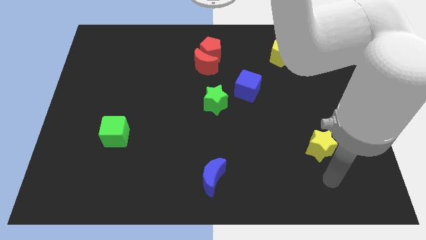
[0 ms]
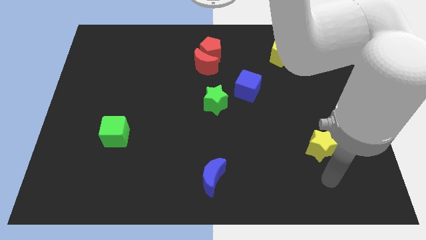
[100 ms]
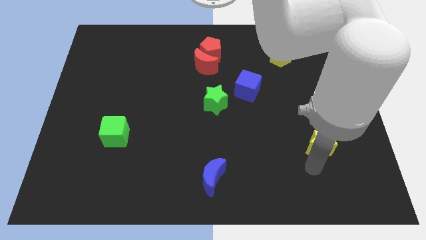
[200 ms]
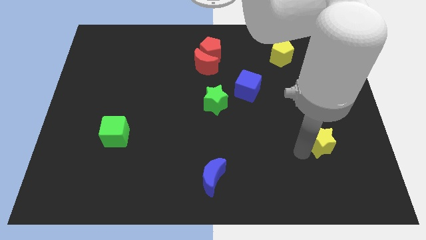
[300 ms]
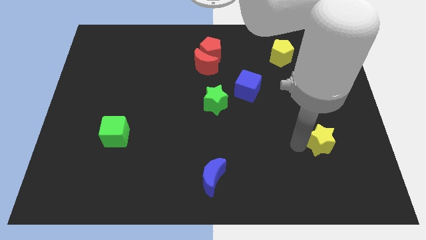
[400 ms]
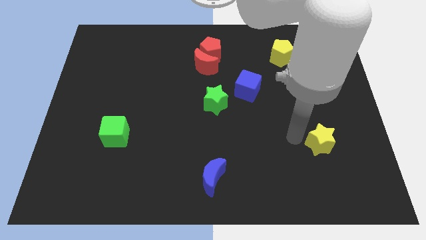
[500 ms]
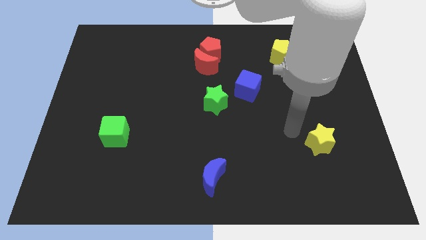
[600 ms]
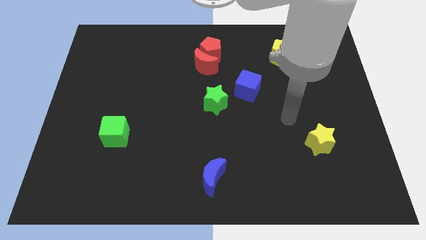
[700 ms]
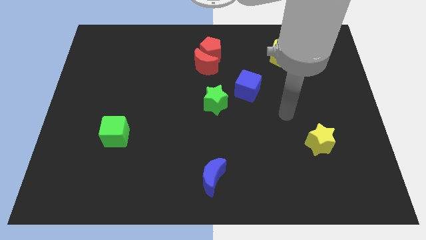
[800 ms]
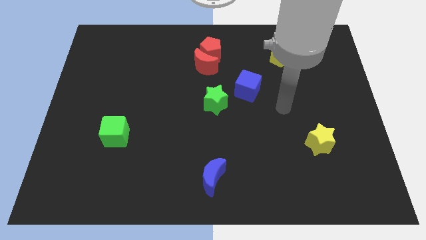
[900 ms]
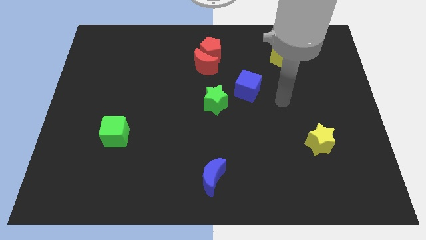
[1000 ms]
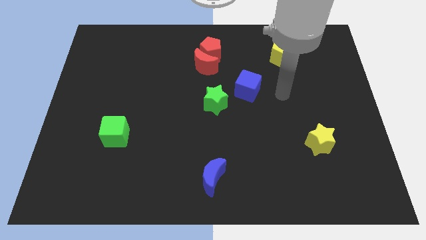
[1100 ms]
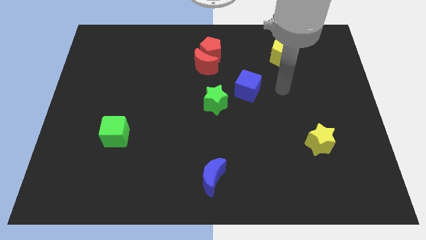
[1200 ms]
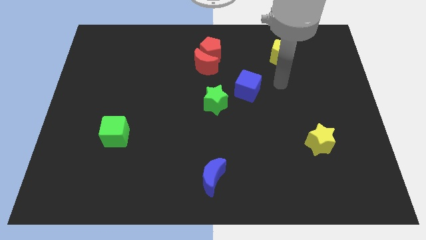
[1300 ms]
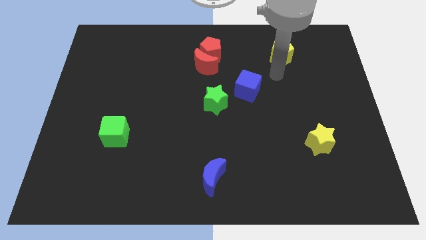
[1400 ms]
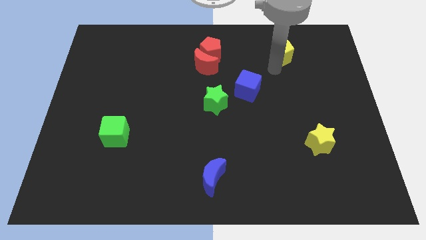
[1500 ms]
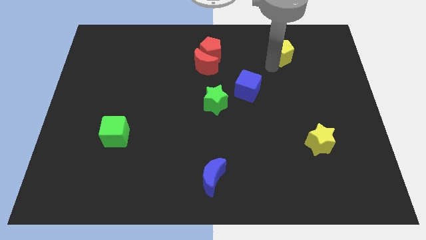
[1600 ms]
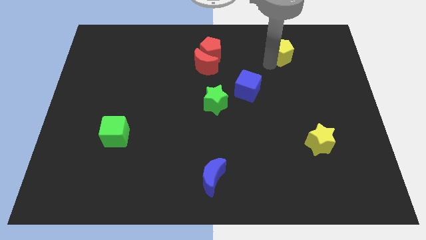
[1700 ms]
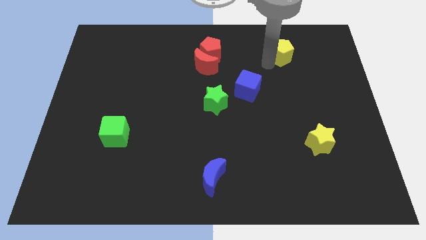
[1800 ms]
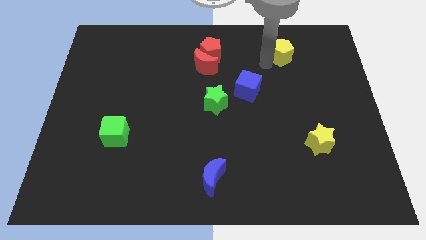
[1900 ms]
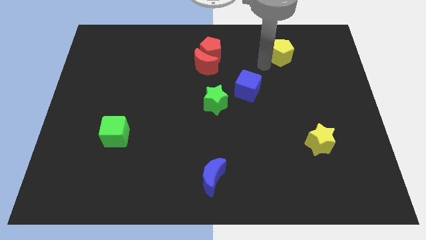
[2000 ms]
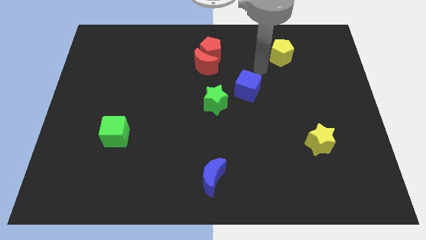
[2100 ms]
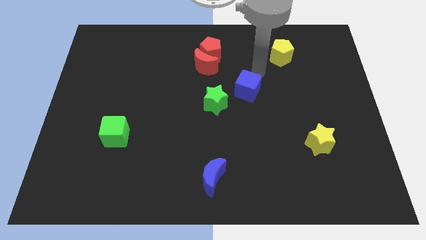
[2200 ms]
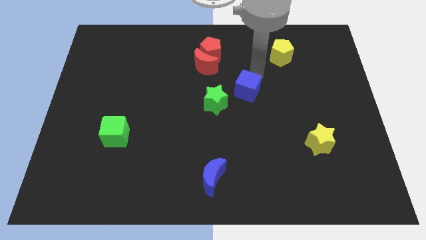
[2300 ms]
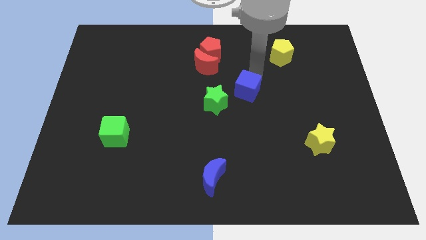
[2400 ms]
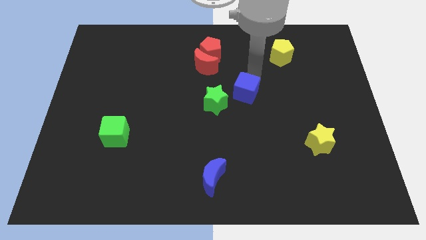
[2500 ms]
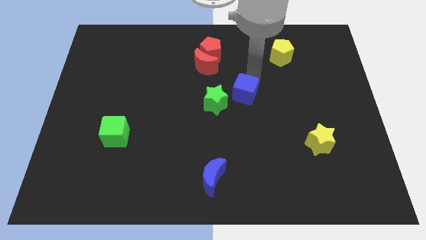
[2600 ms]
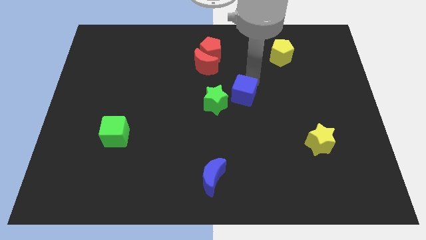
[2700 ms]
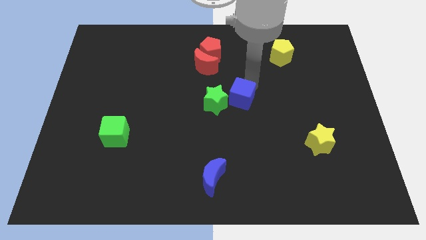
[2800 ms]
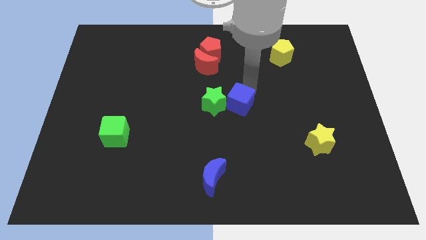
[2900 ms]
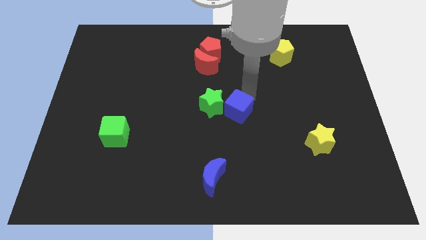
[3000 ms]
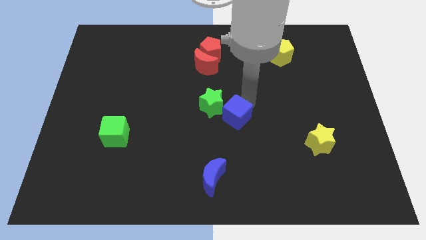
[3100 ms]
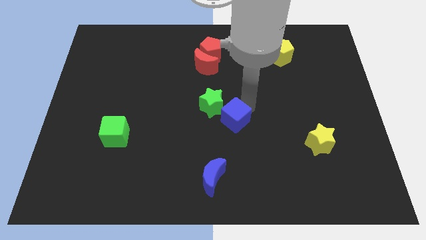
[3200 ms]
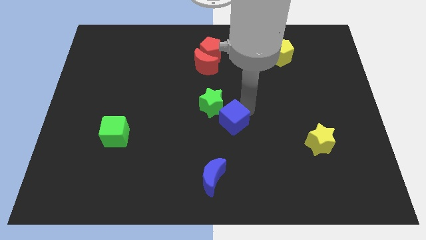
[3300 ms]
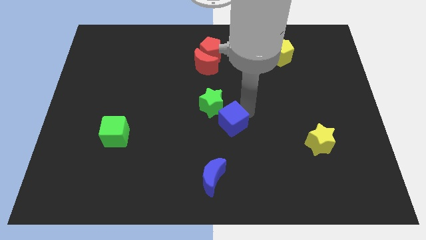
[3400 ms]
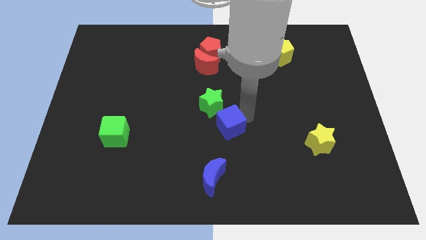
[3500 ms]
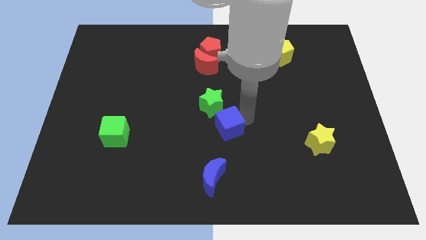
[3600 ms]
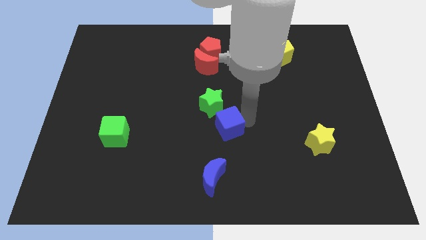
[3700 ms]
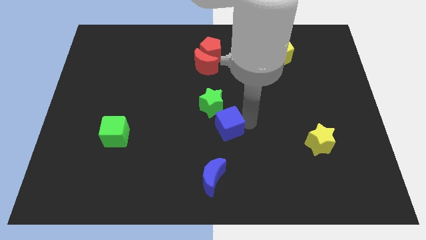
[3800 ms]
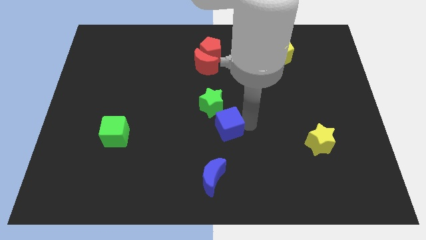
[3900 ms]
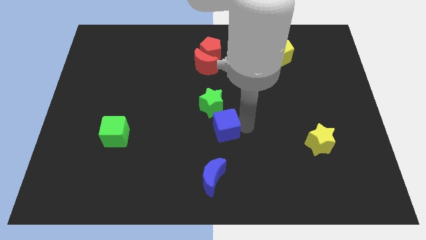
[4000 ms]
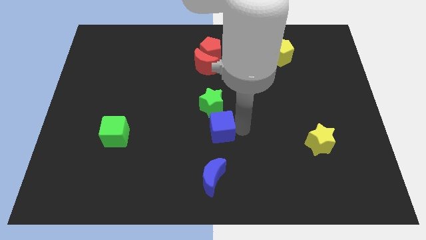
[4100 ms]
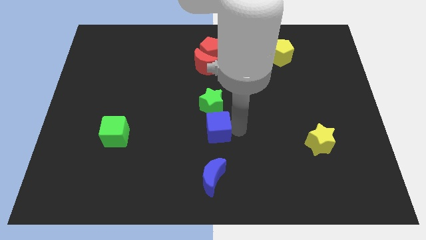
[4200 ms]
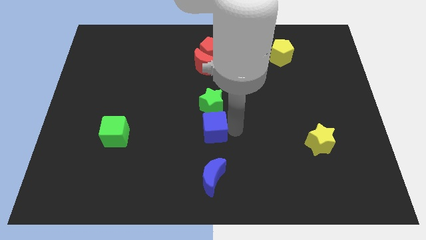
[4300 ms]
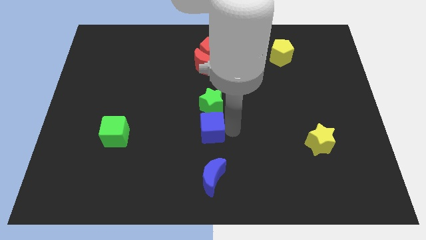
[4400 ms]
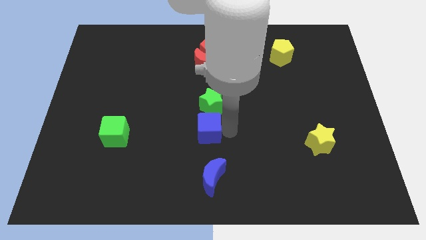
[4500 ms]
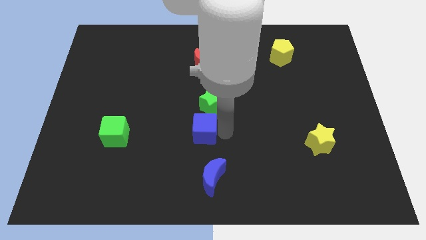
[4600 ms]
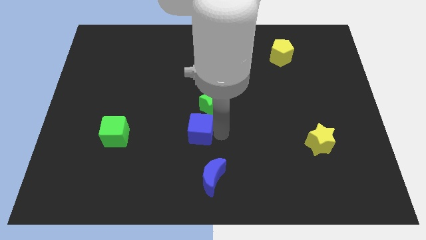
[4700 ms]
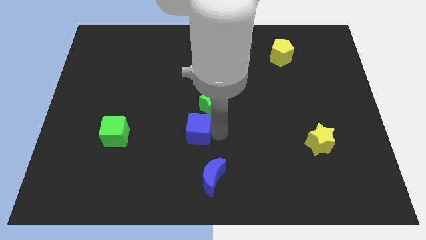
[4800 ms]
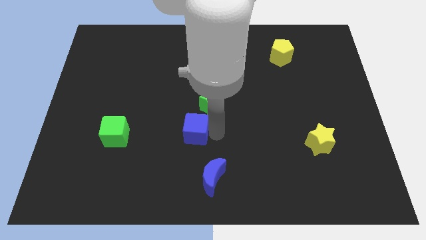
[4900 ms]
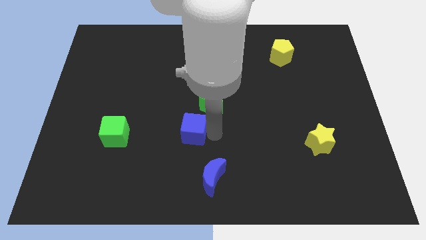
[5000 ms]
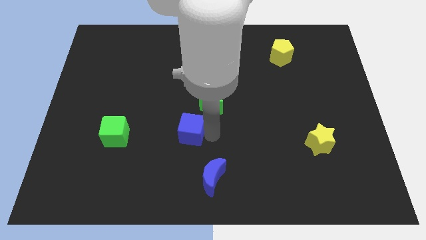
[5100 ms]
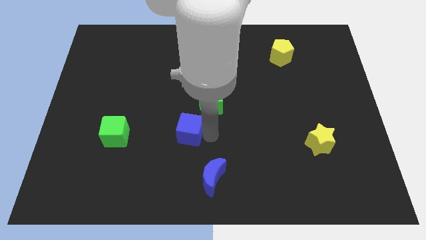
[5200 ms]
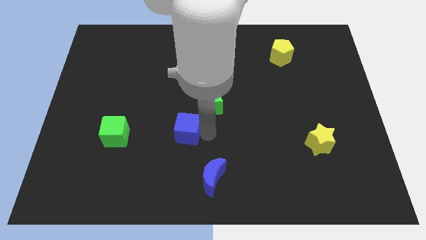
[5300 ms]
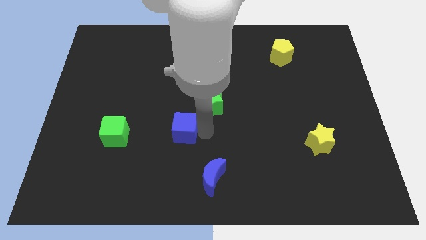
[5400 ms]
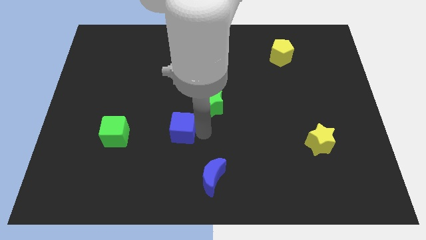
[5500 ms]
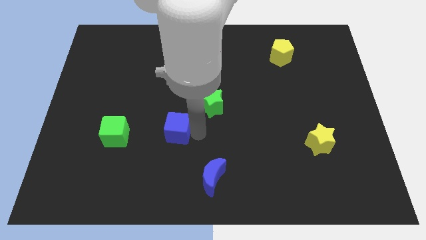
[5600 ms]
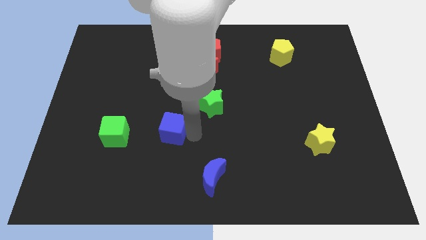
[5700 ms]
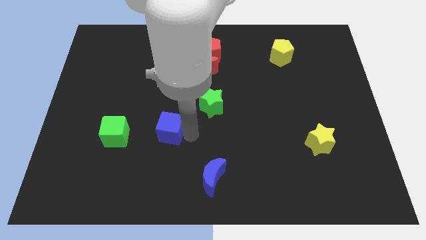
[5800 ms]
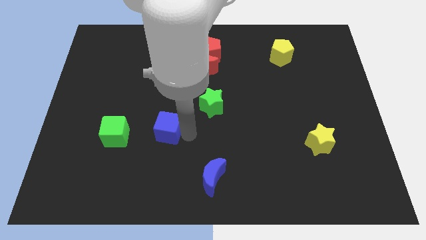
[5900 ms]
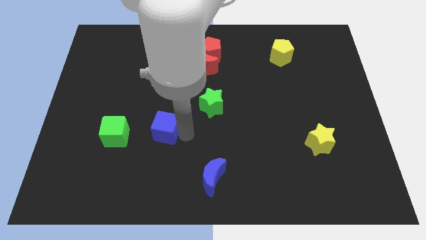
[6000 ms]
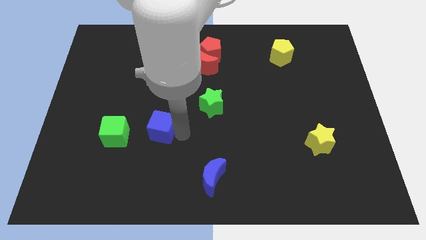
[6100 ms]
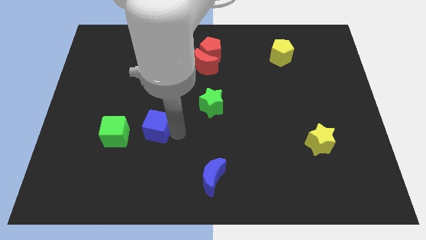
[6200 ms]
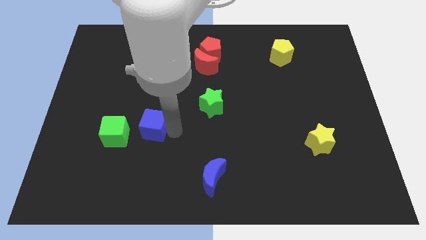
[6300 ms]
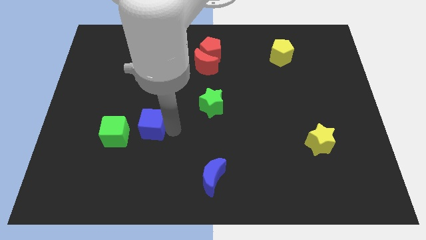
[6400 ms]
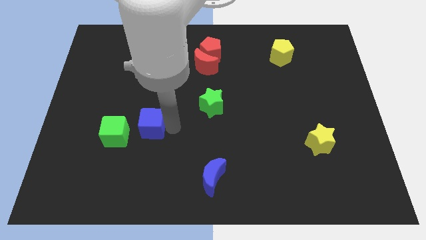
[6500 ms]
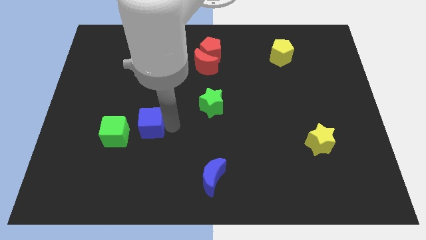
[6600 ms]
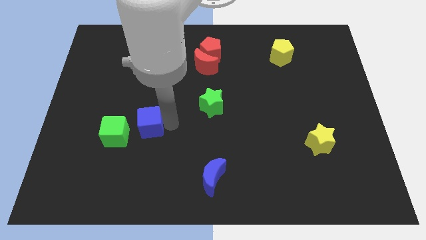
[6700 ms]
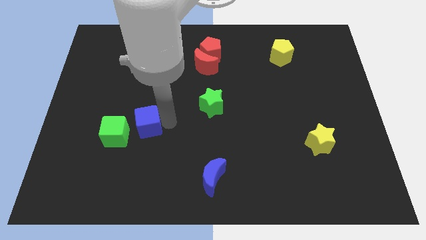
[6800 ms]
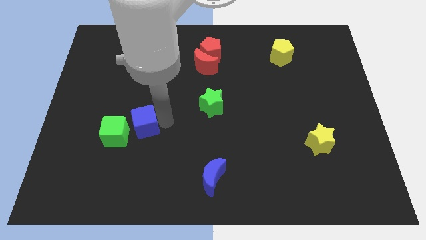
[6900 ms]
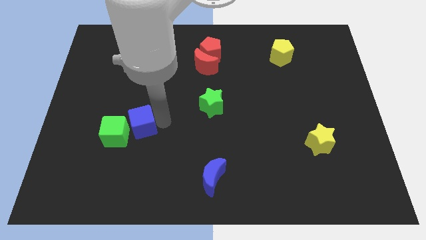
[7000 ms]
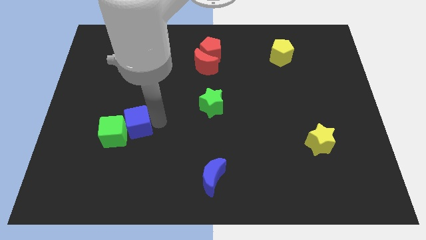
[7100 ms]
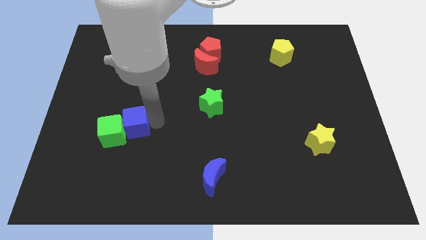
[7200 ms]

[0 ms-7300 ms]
move the blue cube to the green cube

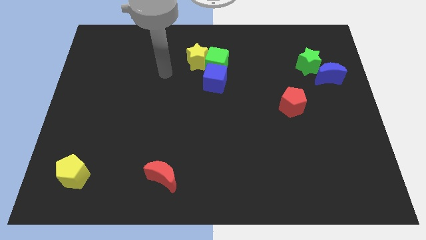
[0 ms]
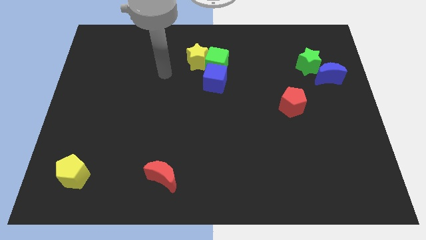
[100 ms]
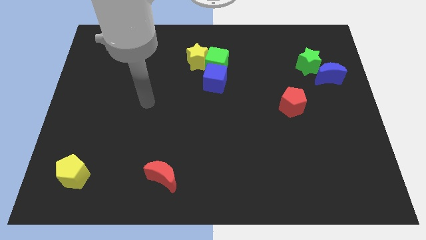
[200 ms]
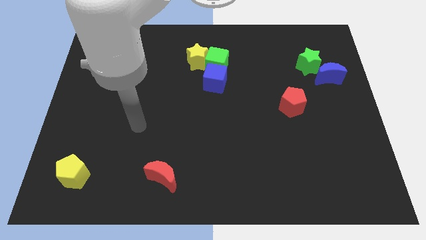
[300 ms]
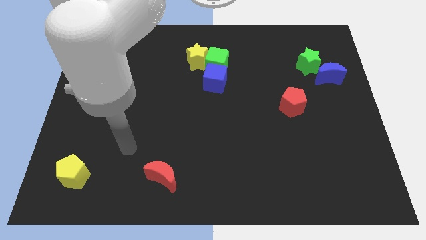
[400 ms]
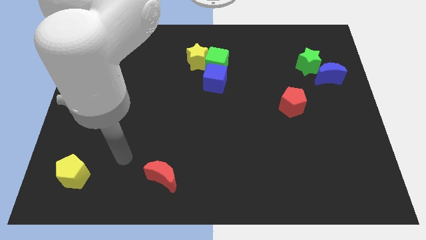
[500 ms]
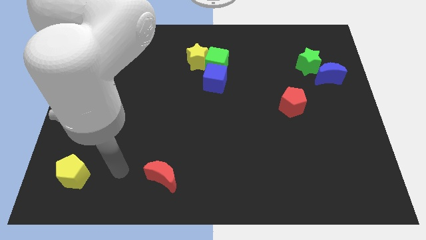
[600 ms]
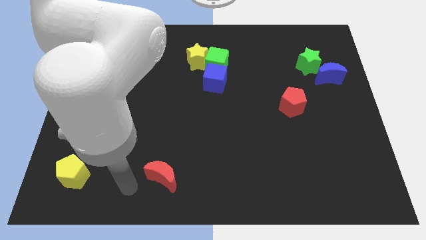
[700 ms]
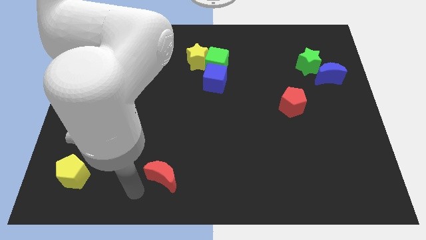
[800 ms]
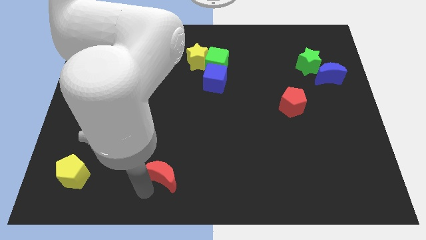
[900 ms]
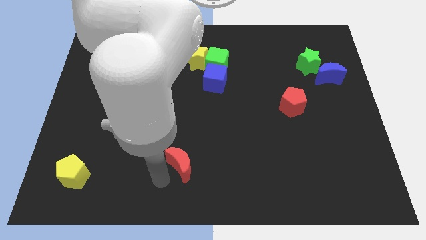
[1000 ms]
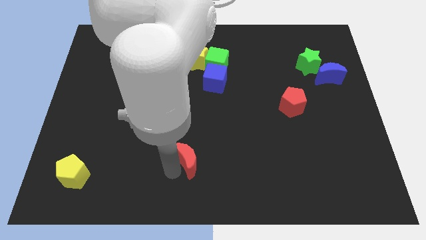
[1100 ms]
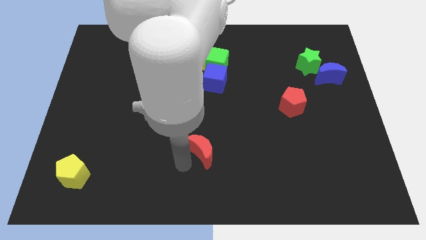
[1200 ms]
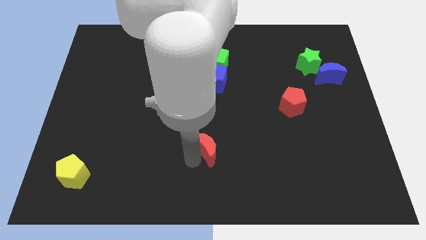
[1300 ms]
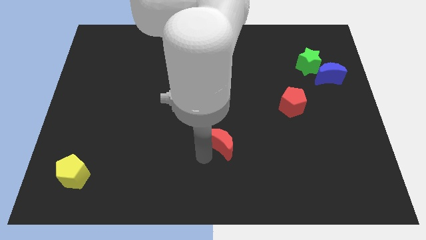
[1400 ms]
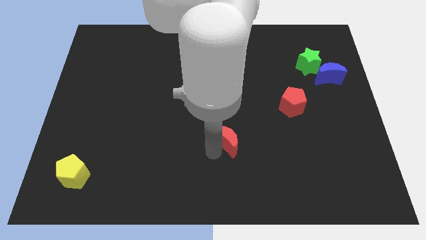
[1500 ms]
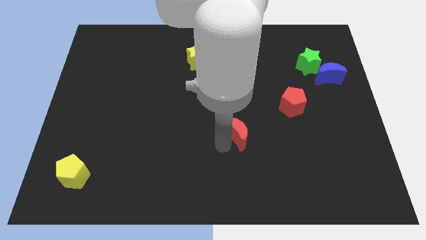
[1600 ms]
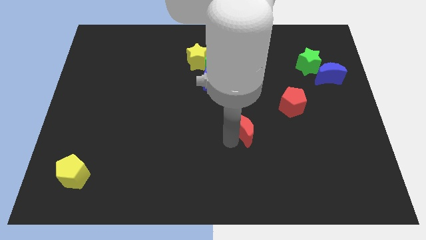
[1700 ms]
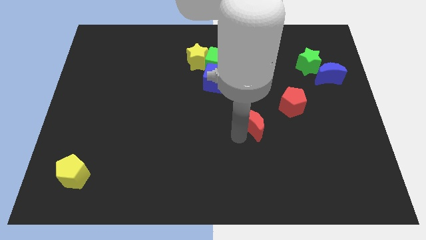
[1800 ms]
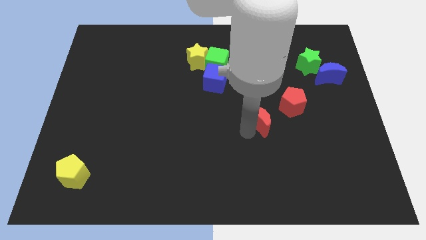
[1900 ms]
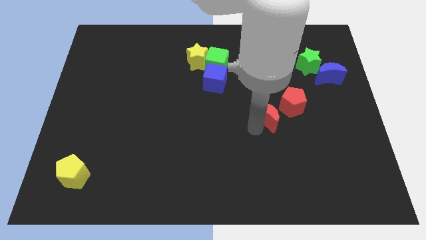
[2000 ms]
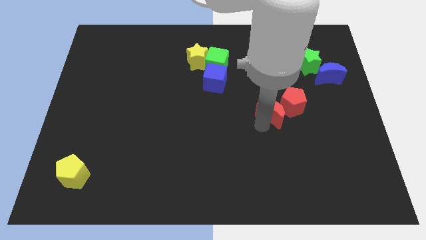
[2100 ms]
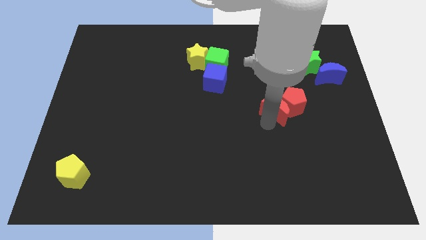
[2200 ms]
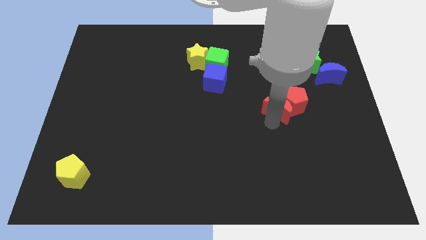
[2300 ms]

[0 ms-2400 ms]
move the red moon to the red pentagon
